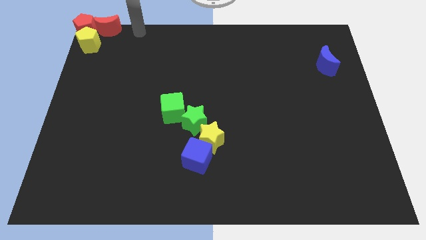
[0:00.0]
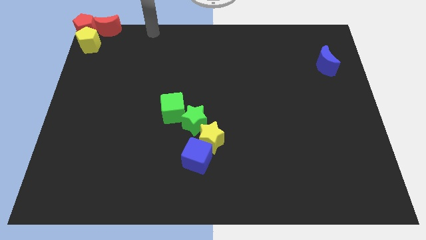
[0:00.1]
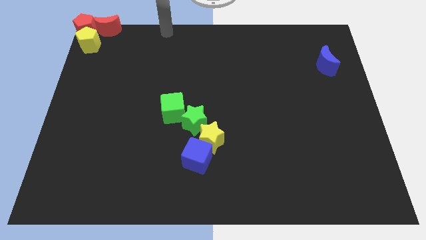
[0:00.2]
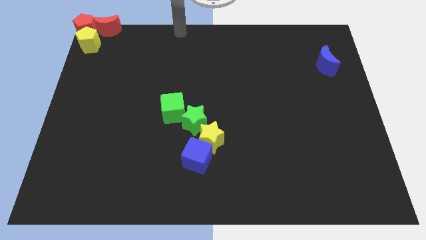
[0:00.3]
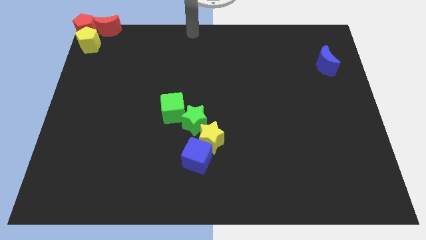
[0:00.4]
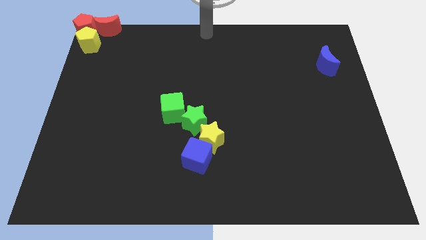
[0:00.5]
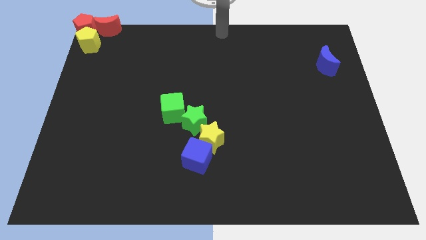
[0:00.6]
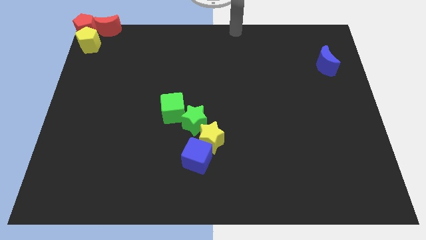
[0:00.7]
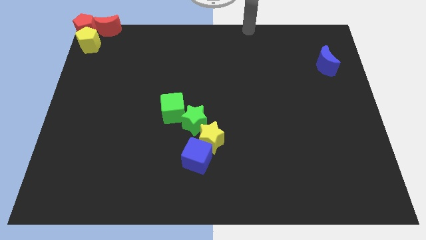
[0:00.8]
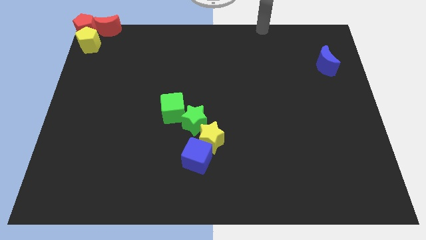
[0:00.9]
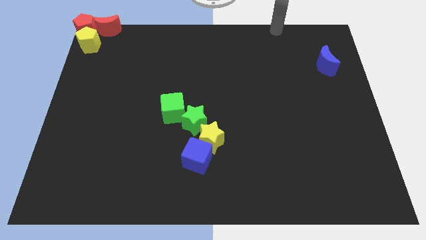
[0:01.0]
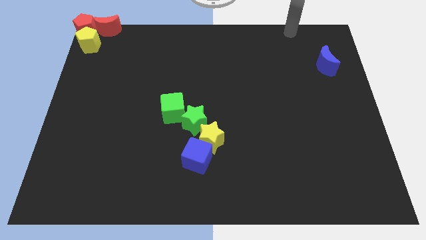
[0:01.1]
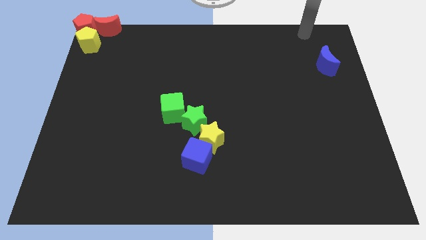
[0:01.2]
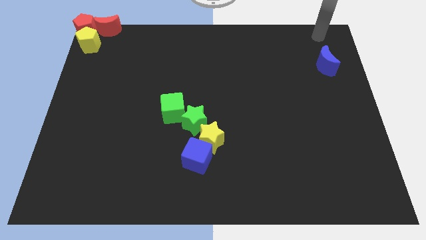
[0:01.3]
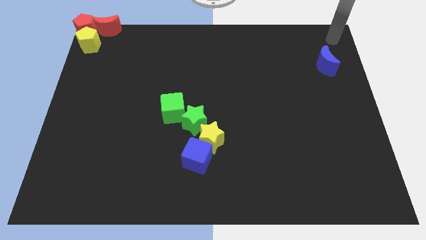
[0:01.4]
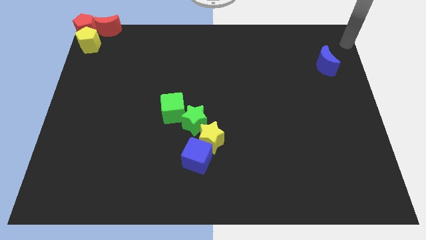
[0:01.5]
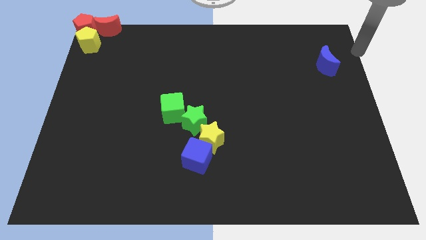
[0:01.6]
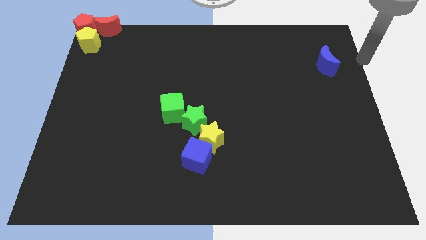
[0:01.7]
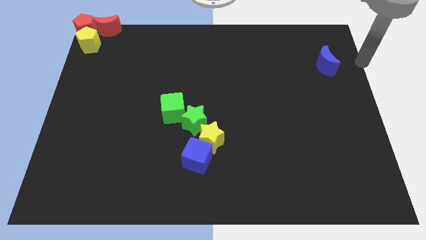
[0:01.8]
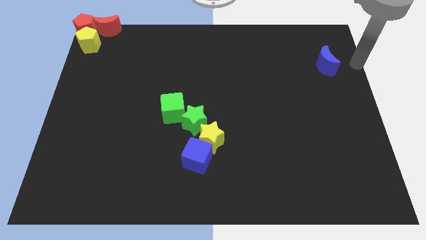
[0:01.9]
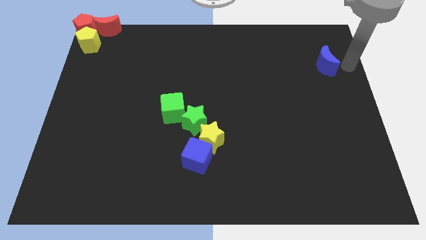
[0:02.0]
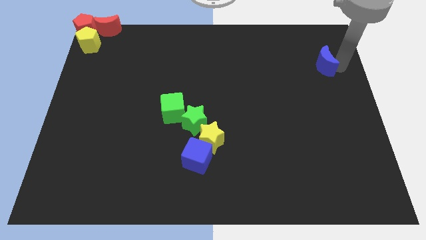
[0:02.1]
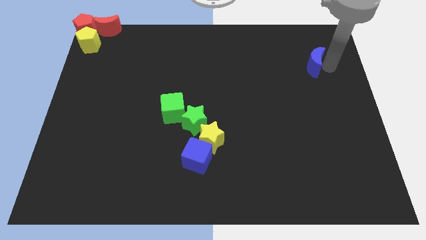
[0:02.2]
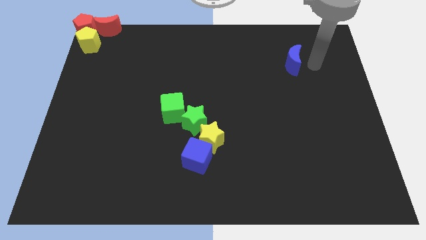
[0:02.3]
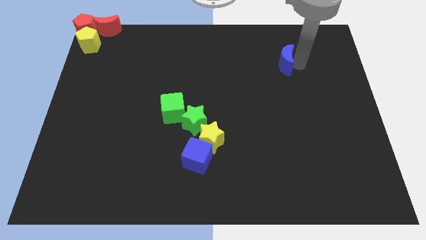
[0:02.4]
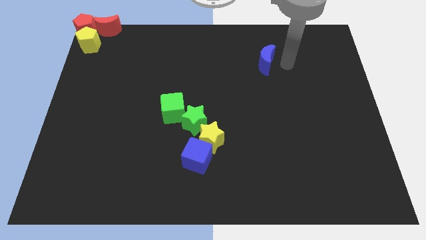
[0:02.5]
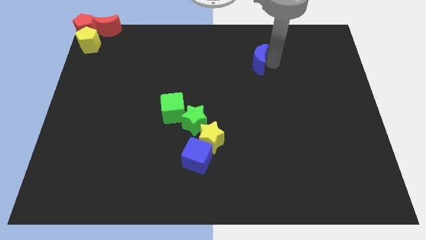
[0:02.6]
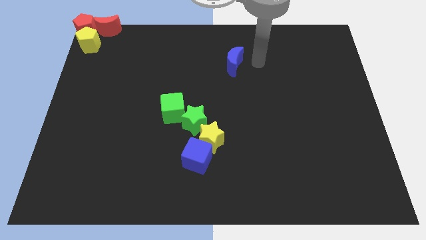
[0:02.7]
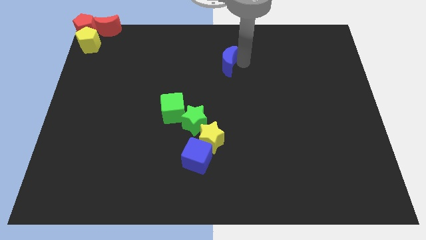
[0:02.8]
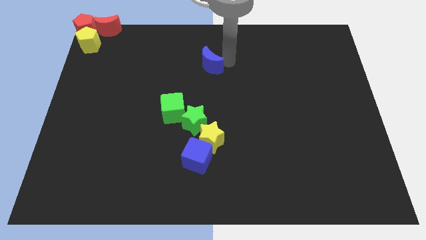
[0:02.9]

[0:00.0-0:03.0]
push the blue crescent to the left

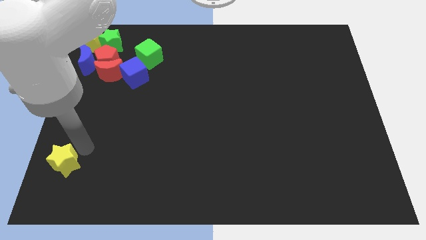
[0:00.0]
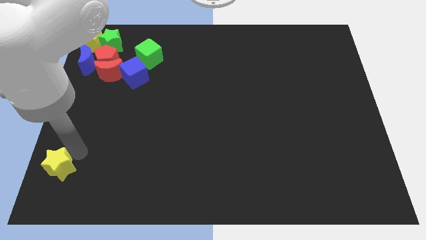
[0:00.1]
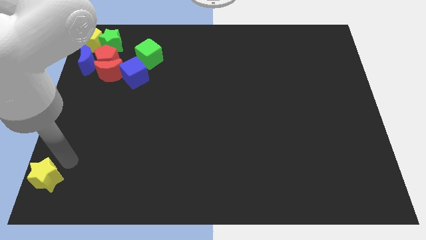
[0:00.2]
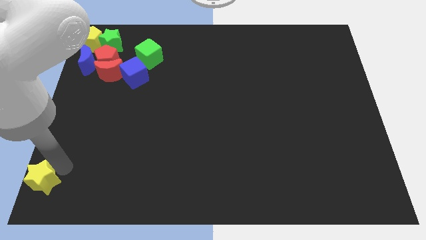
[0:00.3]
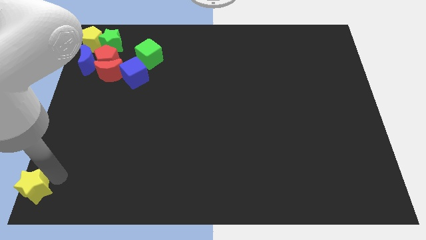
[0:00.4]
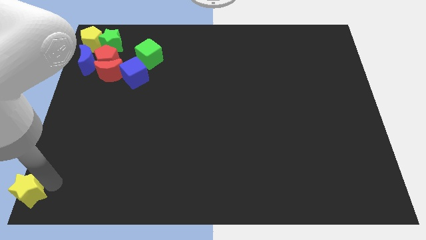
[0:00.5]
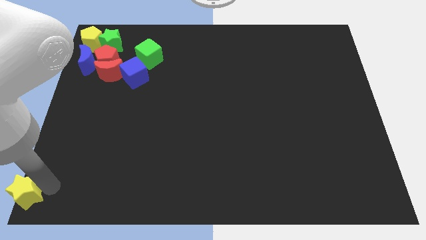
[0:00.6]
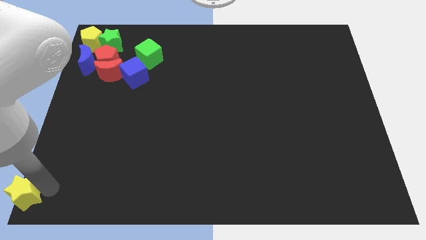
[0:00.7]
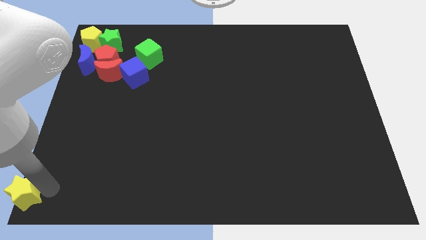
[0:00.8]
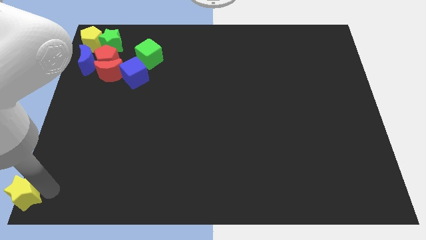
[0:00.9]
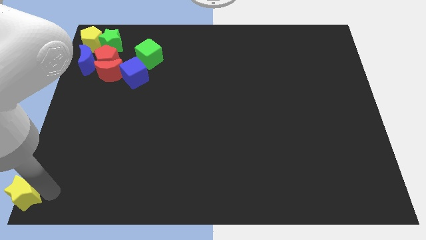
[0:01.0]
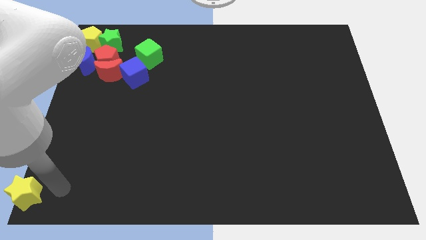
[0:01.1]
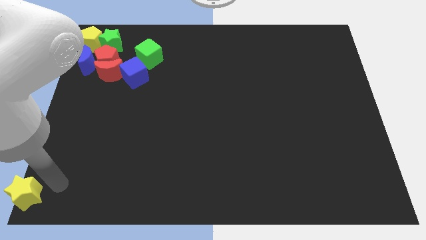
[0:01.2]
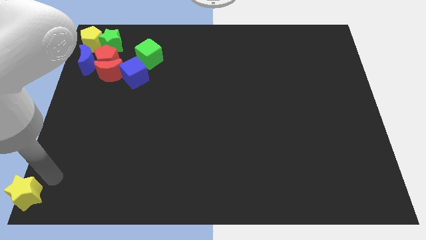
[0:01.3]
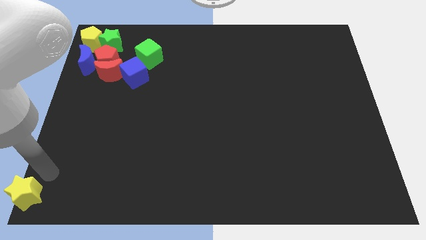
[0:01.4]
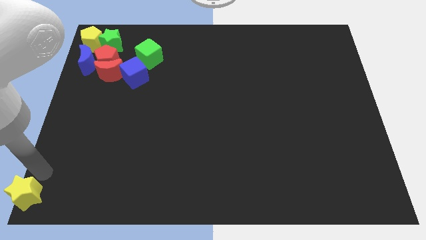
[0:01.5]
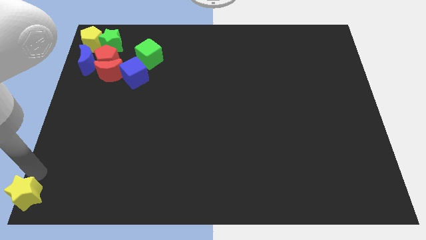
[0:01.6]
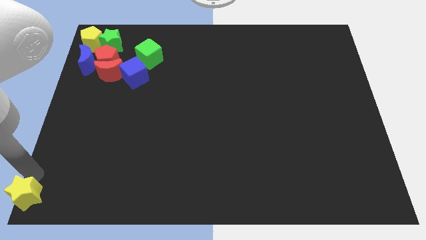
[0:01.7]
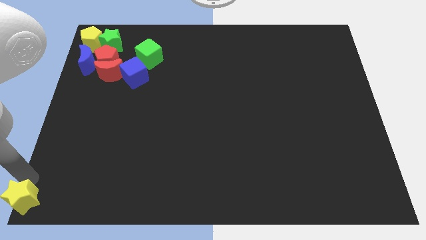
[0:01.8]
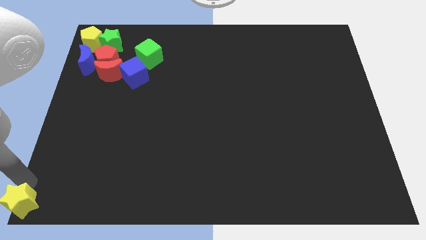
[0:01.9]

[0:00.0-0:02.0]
push the yellow star to the bottom left corner of the board

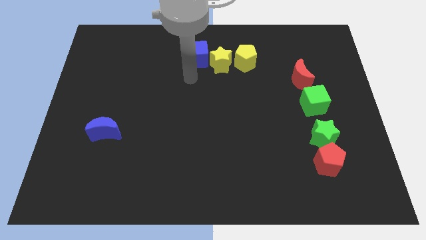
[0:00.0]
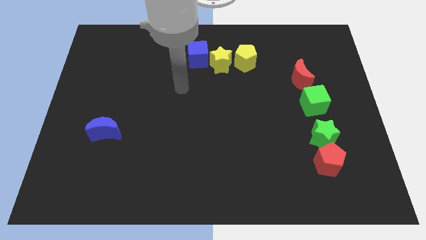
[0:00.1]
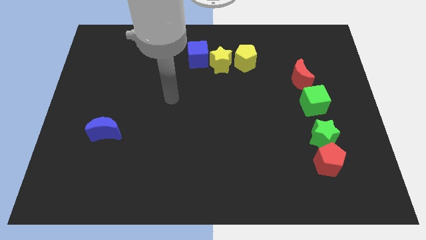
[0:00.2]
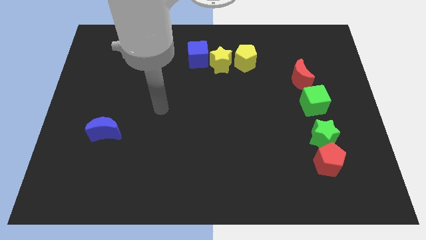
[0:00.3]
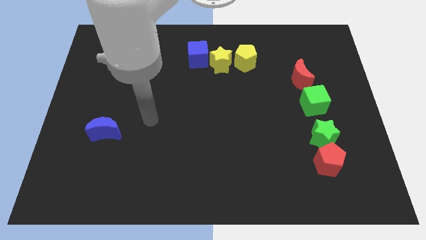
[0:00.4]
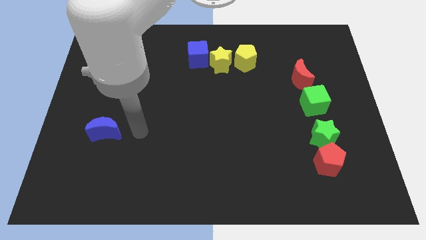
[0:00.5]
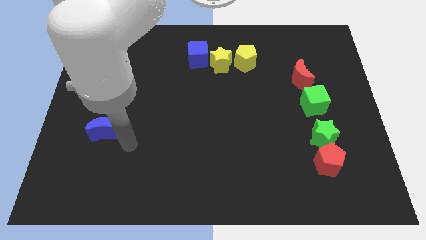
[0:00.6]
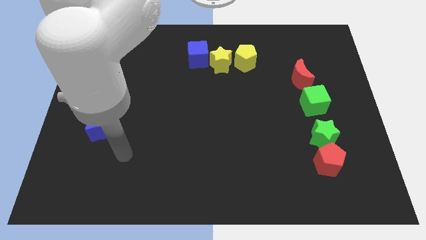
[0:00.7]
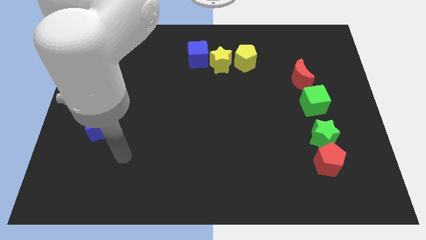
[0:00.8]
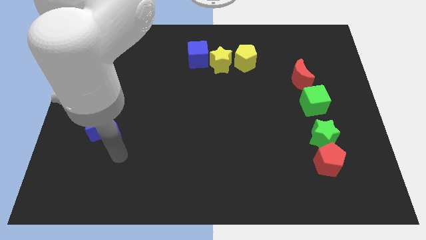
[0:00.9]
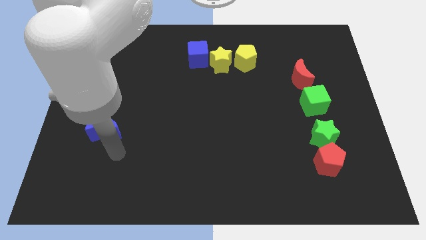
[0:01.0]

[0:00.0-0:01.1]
place your hand close to blue crescent

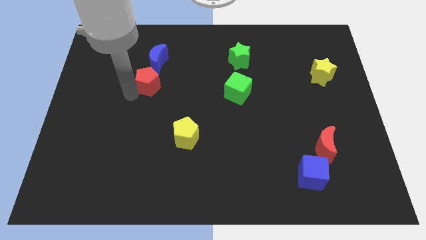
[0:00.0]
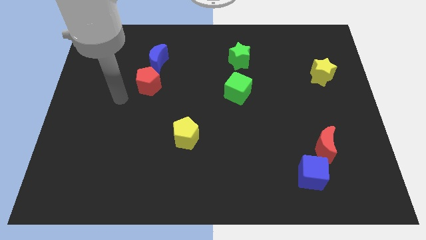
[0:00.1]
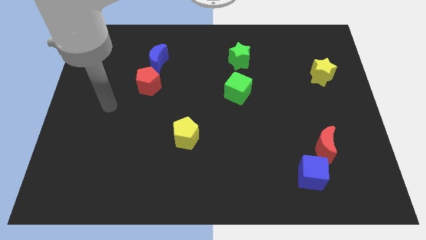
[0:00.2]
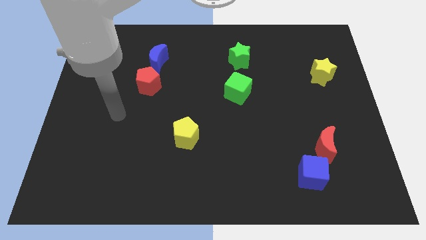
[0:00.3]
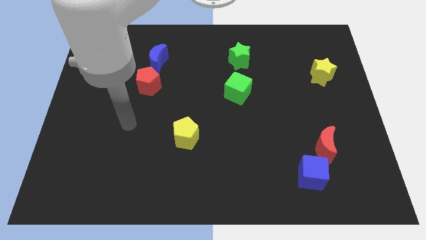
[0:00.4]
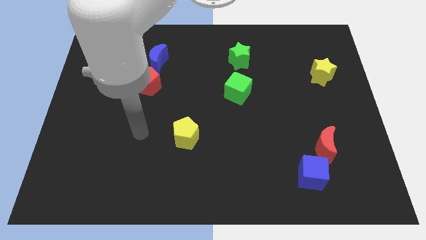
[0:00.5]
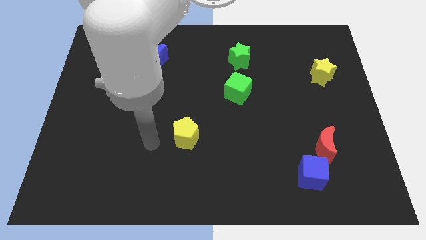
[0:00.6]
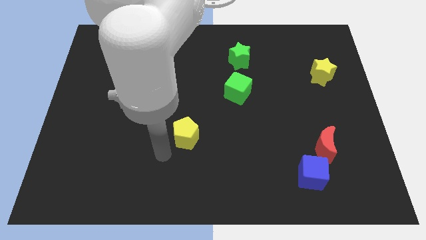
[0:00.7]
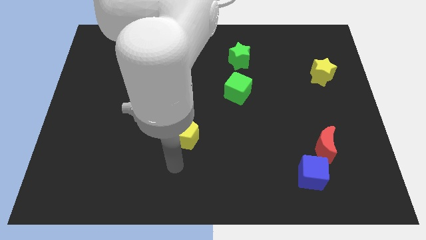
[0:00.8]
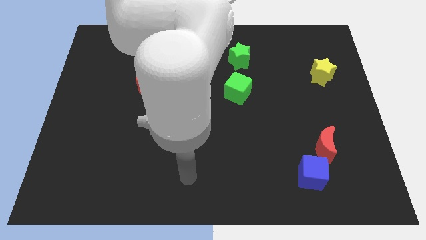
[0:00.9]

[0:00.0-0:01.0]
place the arm below the yellow pentagon

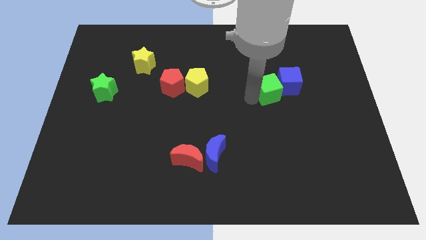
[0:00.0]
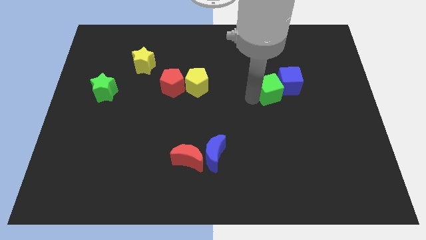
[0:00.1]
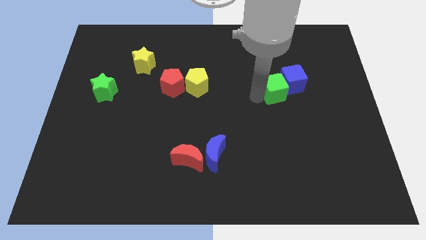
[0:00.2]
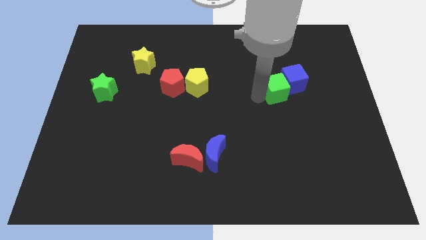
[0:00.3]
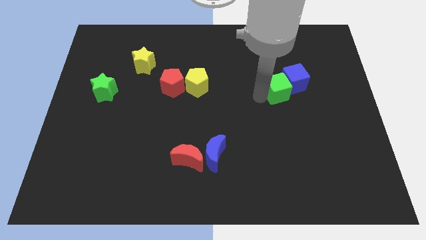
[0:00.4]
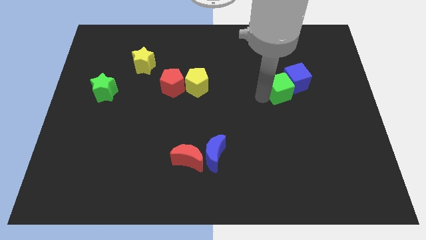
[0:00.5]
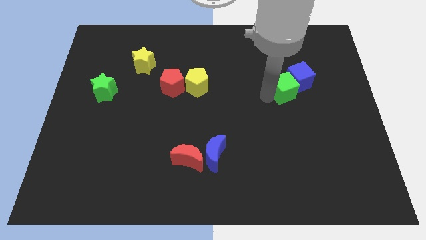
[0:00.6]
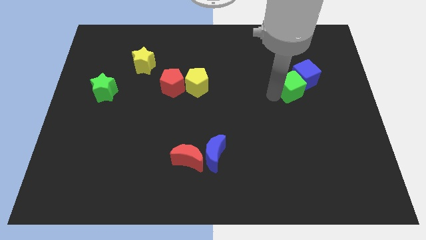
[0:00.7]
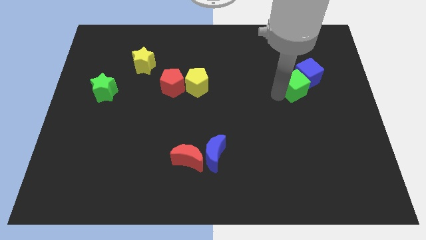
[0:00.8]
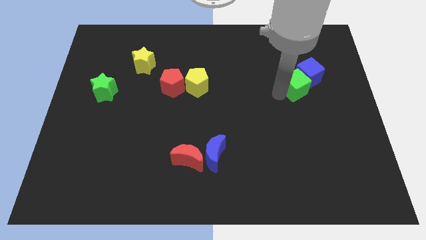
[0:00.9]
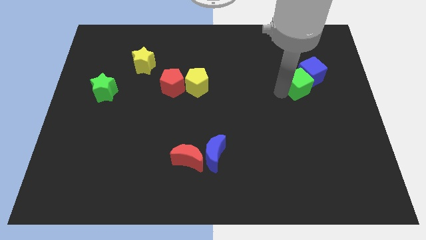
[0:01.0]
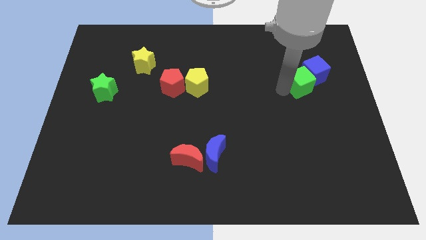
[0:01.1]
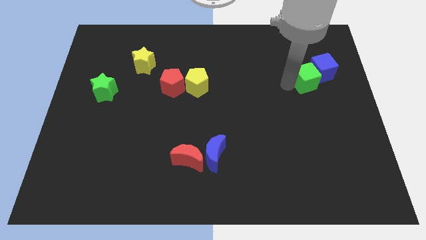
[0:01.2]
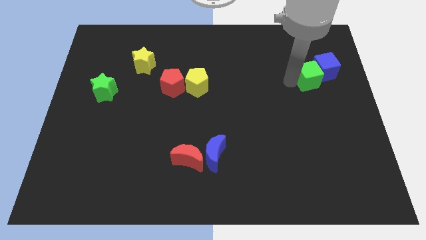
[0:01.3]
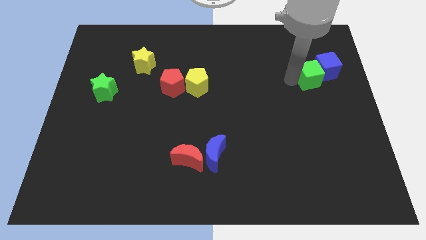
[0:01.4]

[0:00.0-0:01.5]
push the green cube along with the blue cube to the right
